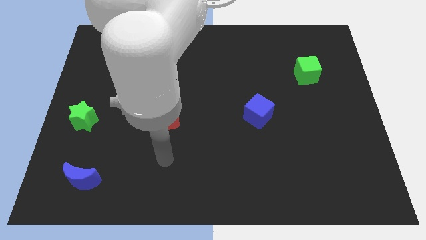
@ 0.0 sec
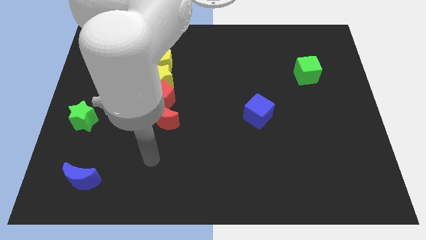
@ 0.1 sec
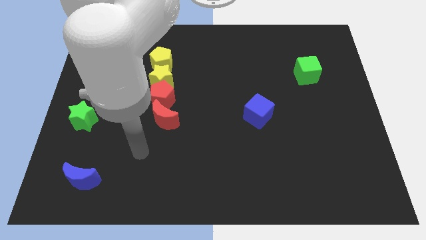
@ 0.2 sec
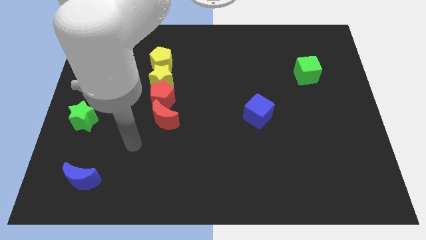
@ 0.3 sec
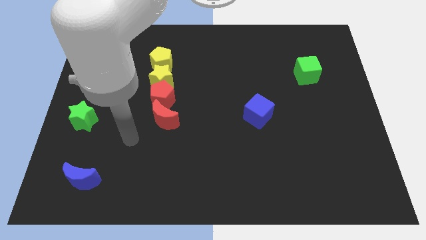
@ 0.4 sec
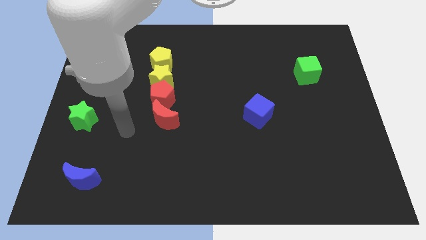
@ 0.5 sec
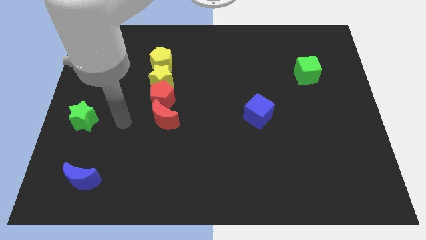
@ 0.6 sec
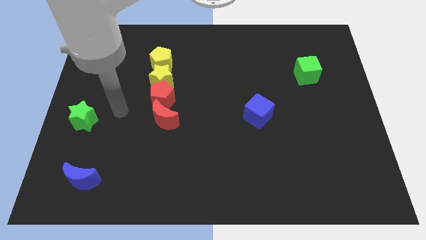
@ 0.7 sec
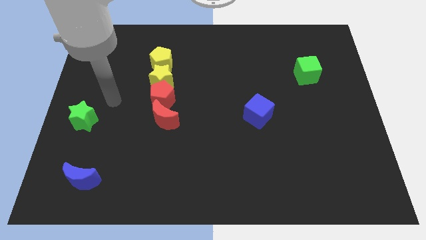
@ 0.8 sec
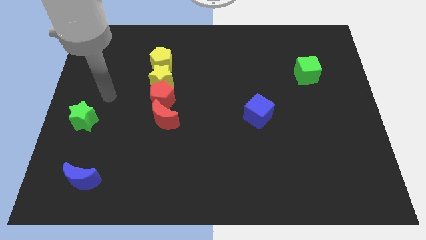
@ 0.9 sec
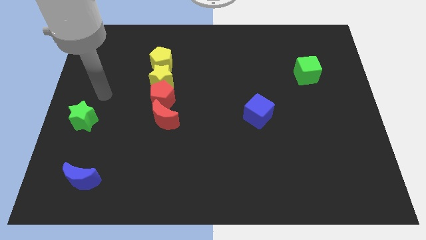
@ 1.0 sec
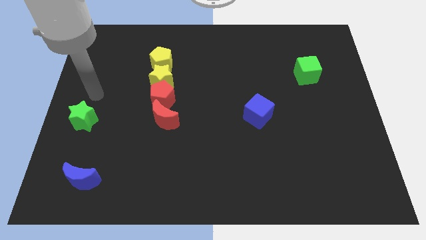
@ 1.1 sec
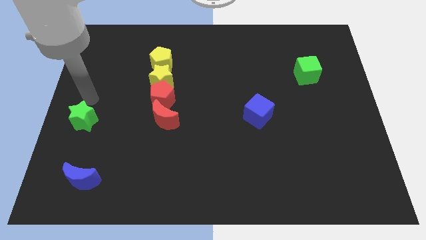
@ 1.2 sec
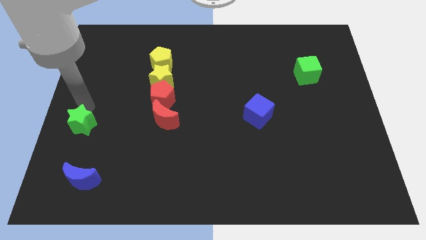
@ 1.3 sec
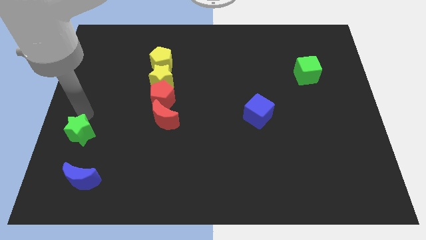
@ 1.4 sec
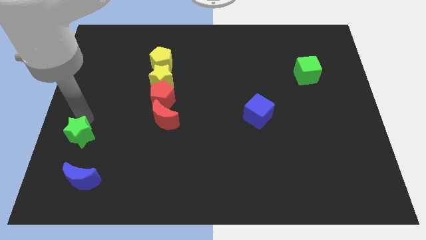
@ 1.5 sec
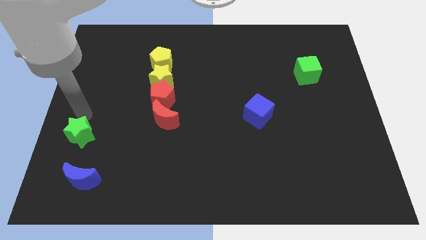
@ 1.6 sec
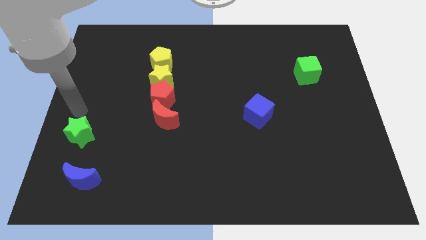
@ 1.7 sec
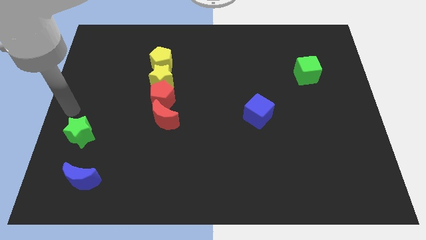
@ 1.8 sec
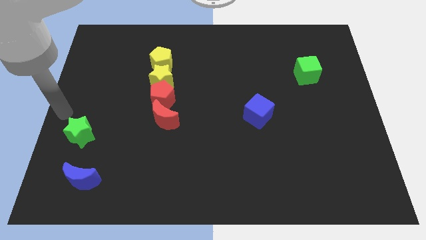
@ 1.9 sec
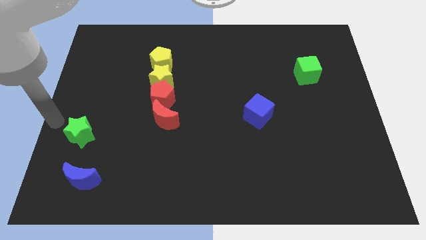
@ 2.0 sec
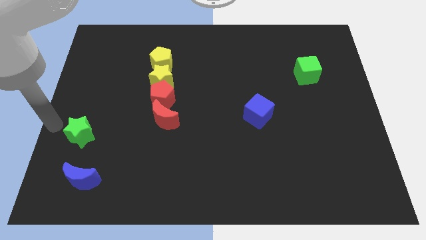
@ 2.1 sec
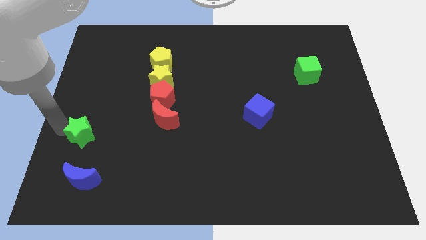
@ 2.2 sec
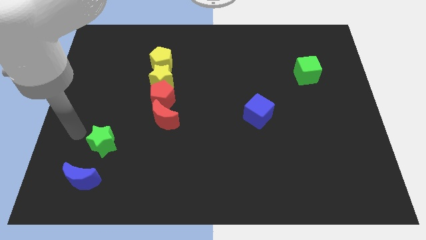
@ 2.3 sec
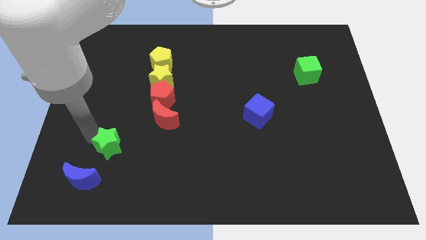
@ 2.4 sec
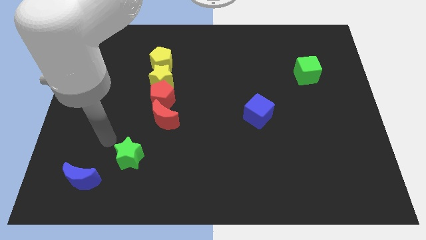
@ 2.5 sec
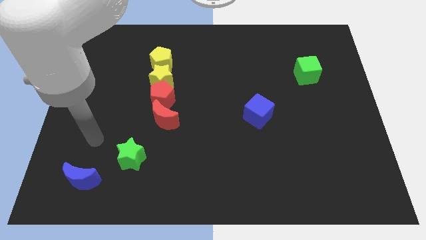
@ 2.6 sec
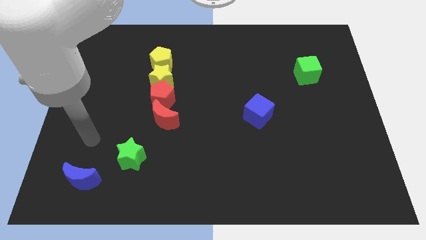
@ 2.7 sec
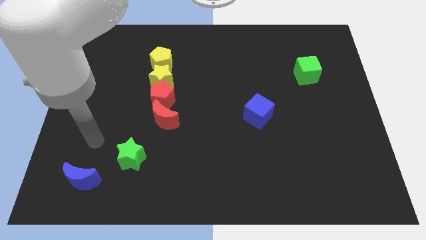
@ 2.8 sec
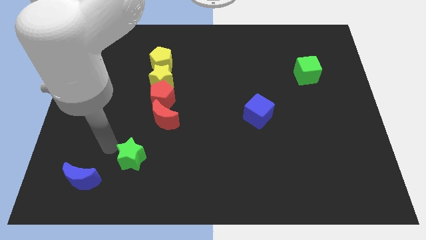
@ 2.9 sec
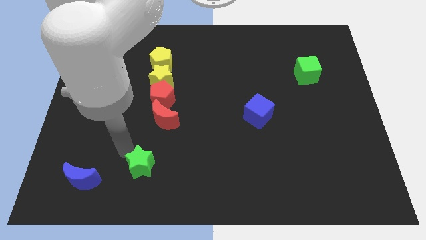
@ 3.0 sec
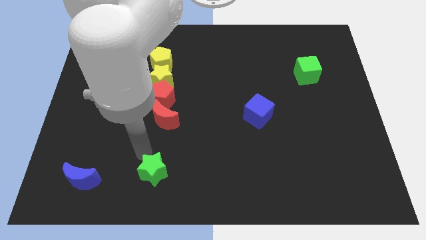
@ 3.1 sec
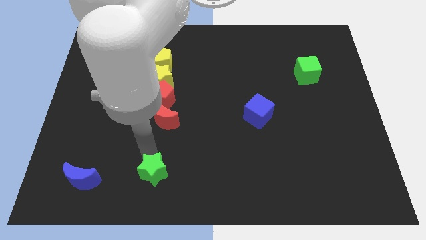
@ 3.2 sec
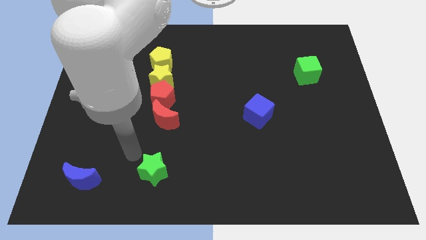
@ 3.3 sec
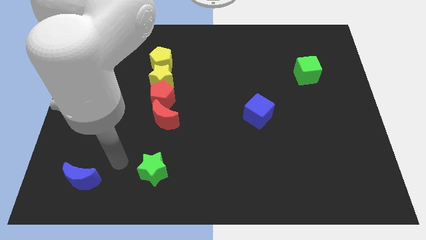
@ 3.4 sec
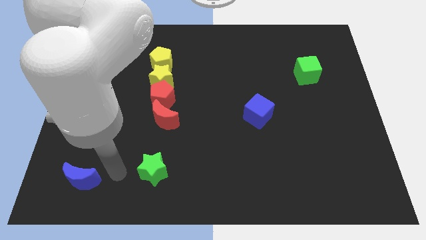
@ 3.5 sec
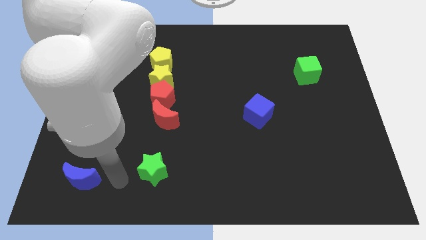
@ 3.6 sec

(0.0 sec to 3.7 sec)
place the green star horizontally to the right side of the blue crescent

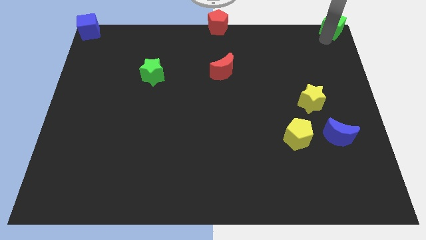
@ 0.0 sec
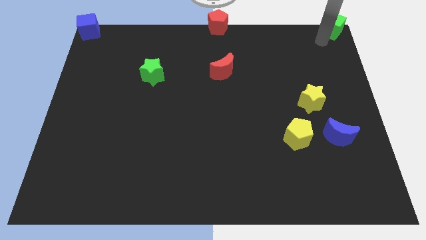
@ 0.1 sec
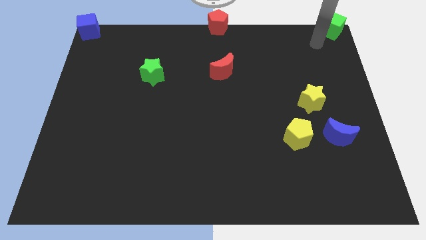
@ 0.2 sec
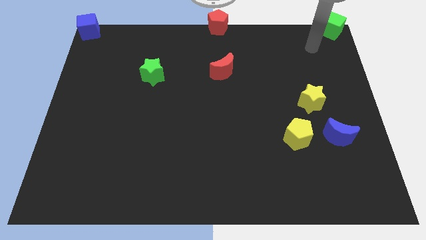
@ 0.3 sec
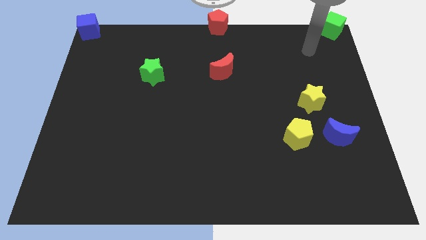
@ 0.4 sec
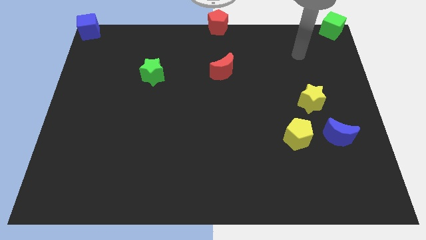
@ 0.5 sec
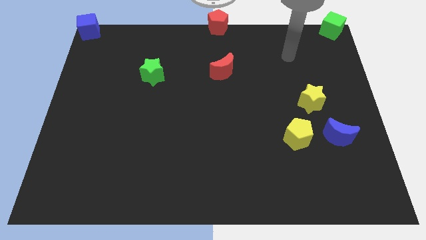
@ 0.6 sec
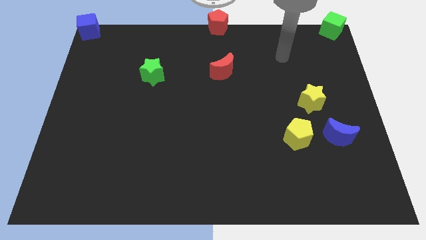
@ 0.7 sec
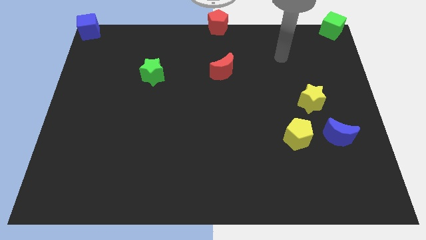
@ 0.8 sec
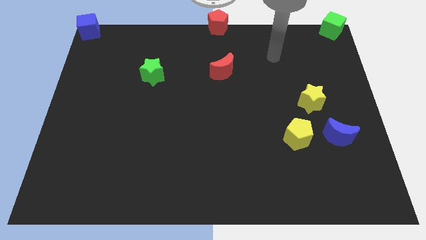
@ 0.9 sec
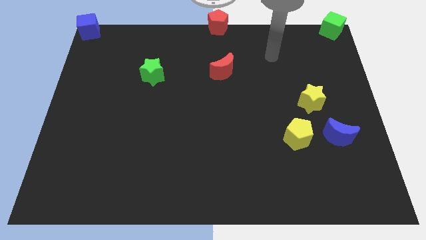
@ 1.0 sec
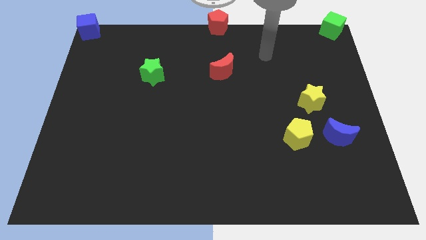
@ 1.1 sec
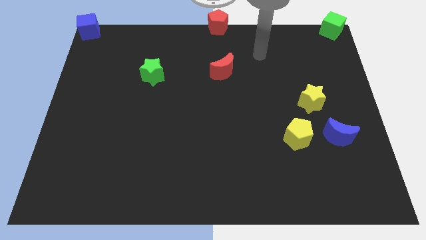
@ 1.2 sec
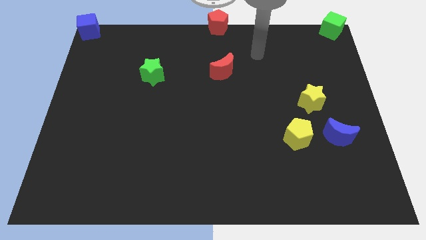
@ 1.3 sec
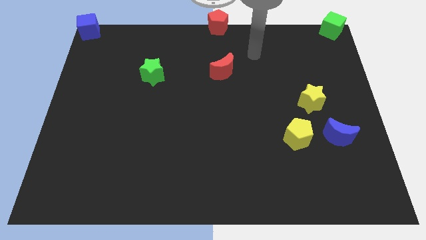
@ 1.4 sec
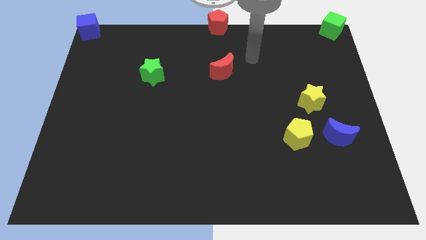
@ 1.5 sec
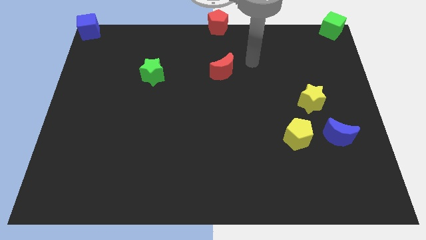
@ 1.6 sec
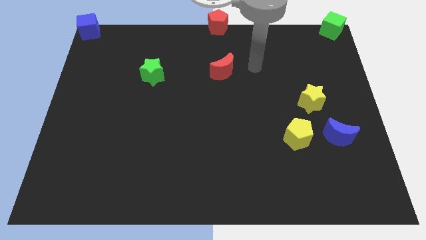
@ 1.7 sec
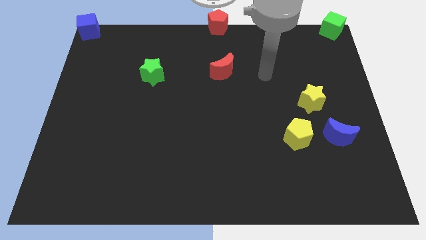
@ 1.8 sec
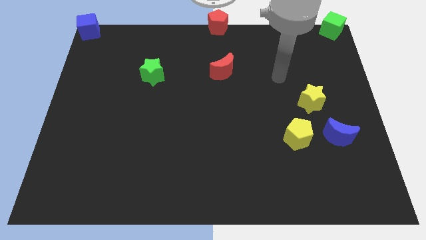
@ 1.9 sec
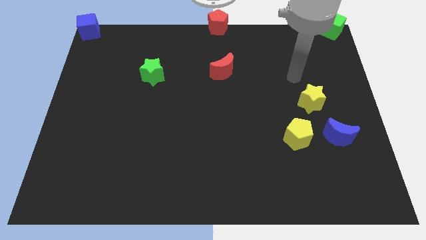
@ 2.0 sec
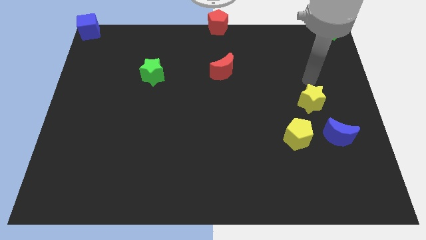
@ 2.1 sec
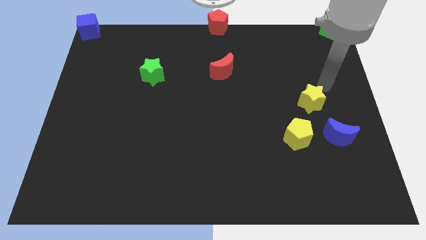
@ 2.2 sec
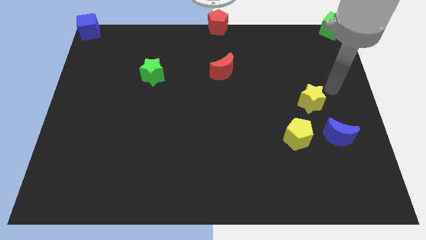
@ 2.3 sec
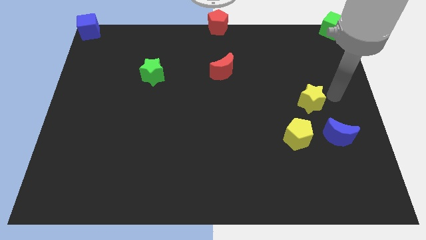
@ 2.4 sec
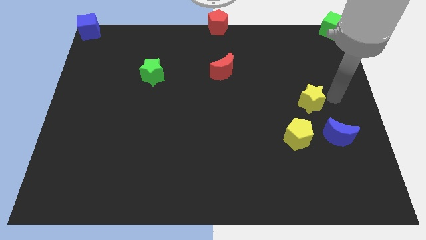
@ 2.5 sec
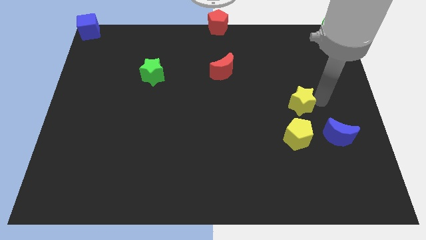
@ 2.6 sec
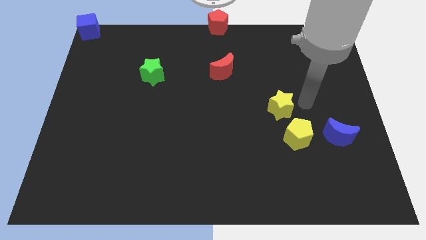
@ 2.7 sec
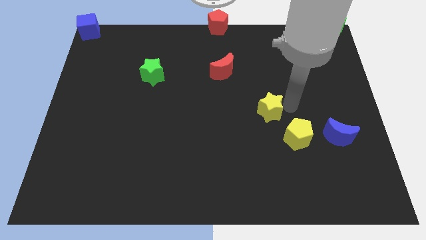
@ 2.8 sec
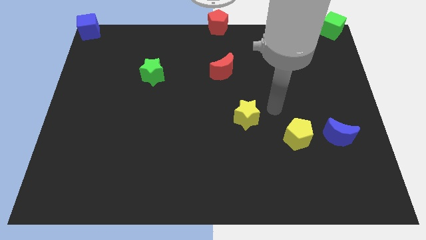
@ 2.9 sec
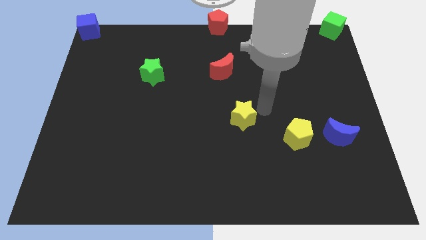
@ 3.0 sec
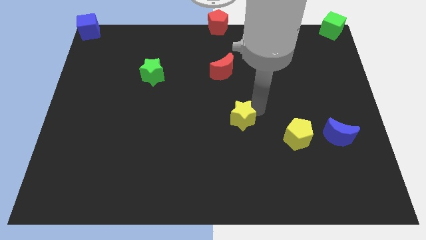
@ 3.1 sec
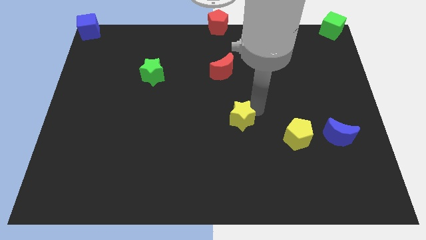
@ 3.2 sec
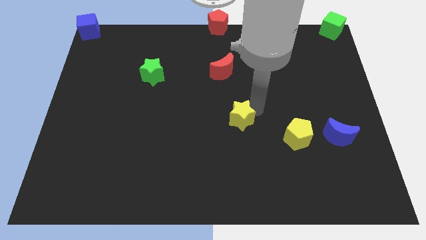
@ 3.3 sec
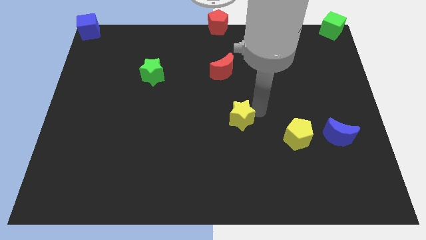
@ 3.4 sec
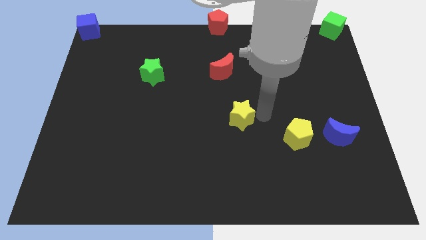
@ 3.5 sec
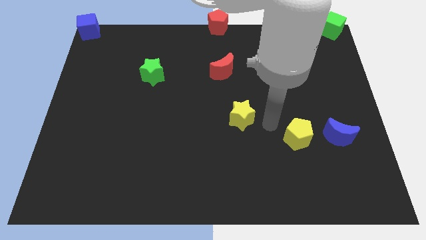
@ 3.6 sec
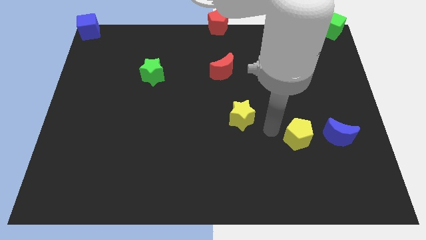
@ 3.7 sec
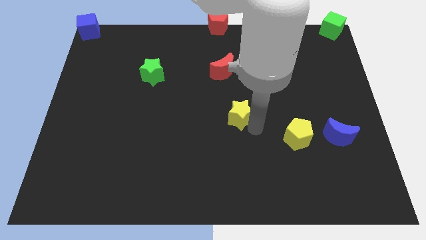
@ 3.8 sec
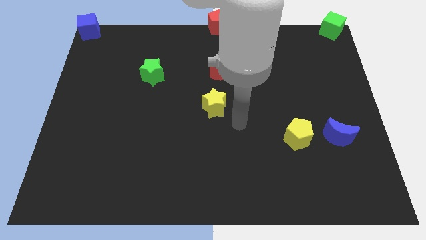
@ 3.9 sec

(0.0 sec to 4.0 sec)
move the arm away from the green cube

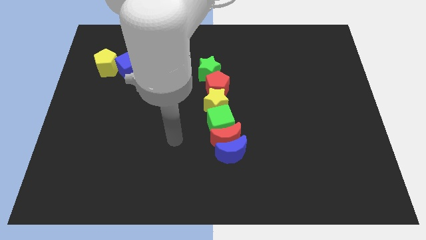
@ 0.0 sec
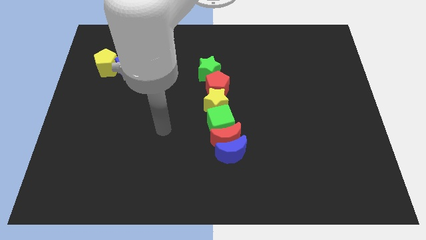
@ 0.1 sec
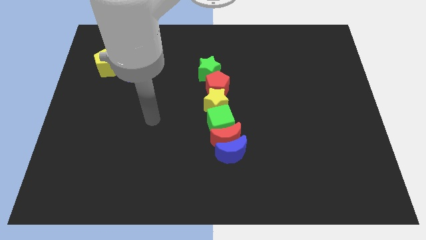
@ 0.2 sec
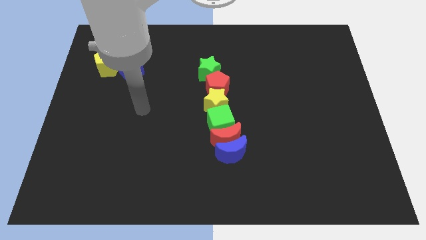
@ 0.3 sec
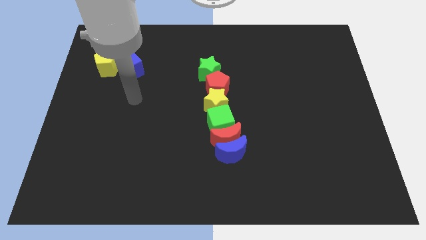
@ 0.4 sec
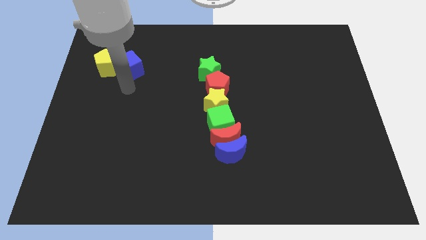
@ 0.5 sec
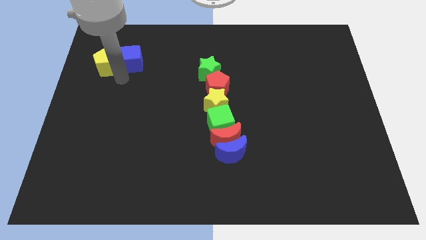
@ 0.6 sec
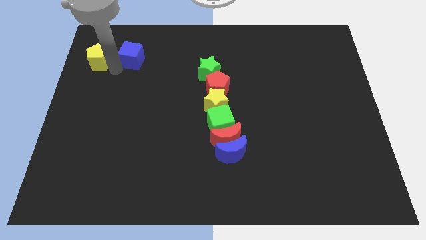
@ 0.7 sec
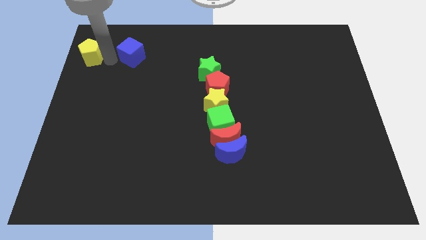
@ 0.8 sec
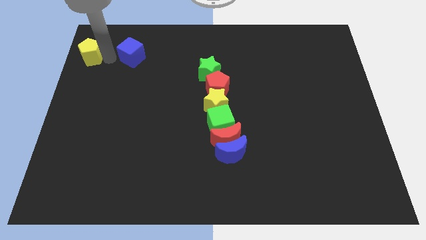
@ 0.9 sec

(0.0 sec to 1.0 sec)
separate the blue cube and yellow pentagon

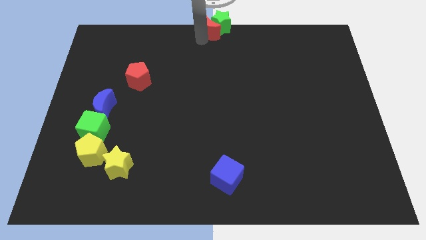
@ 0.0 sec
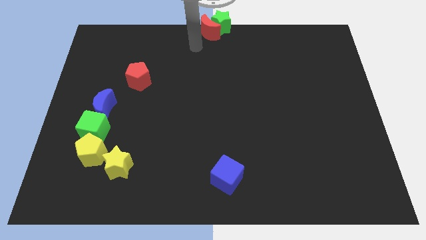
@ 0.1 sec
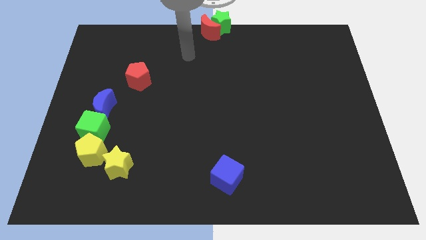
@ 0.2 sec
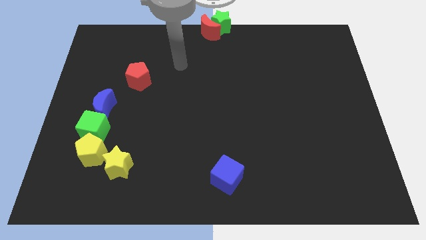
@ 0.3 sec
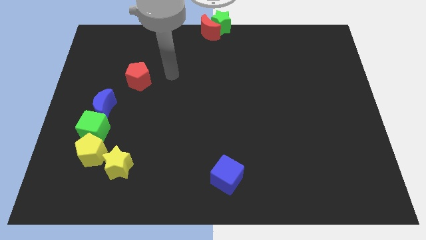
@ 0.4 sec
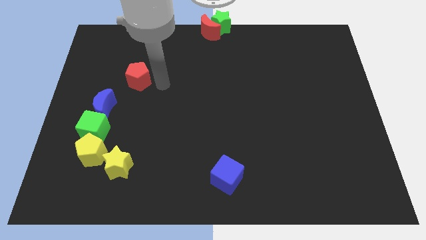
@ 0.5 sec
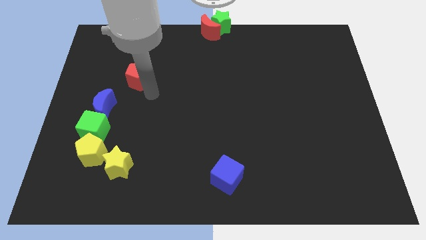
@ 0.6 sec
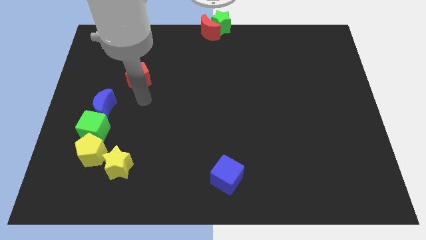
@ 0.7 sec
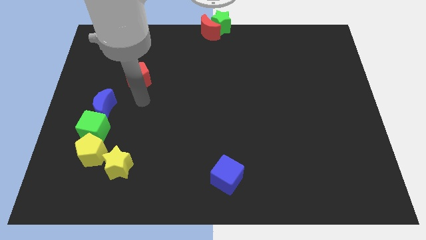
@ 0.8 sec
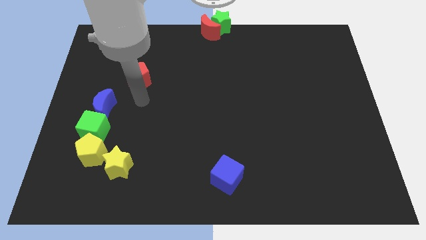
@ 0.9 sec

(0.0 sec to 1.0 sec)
move the arm away from the red moon
